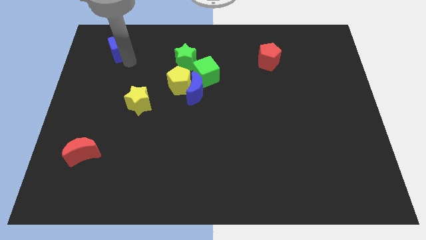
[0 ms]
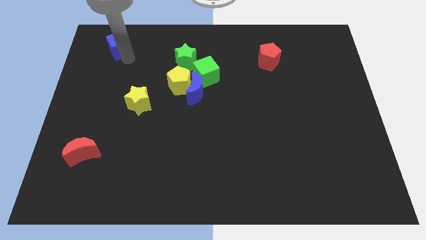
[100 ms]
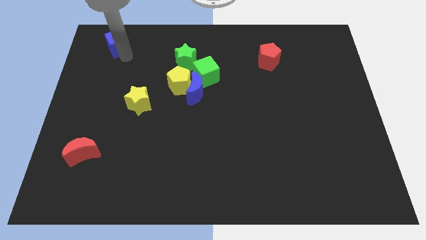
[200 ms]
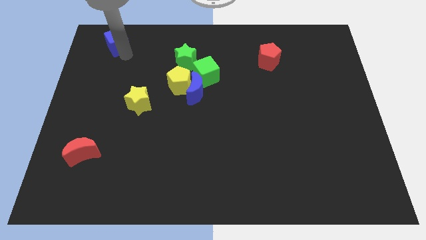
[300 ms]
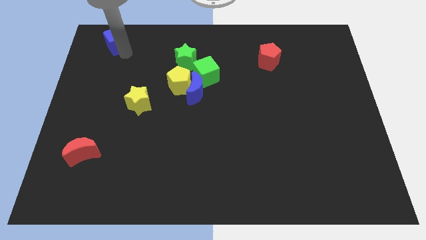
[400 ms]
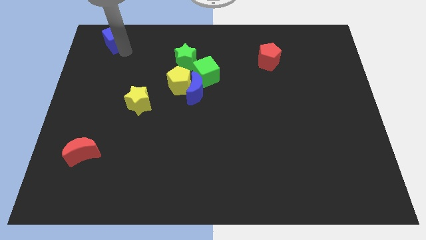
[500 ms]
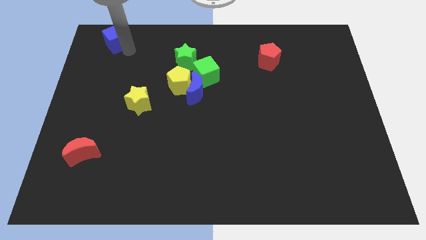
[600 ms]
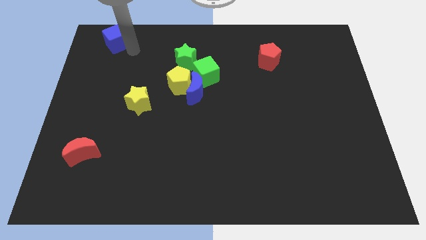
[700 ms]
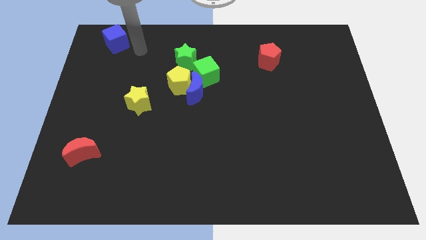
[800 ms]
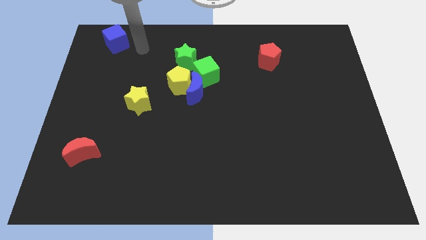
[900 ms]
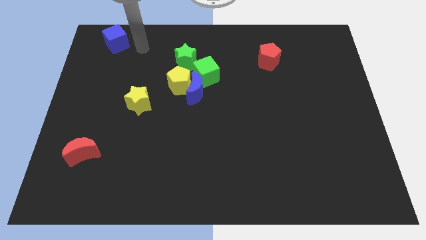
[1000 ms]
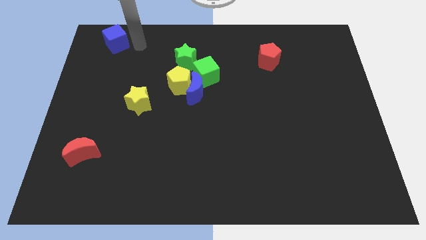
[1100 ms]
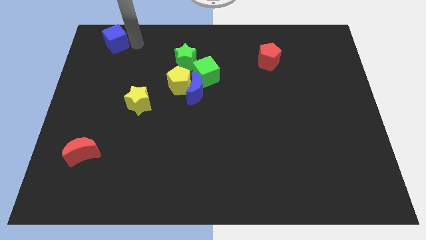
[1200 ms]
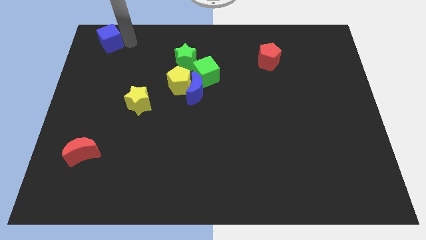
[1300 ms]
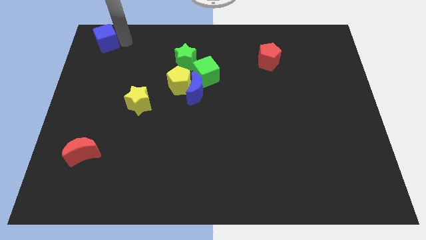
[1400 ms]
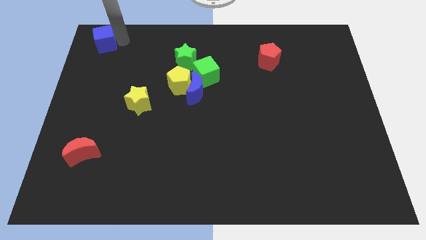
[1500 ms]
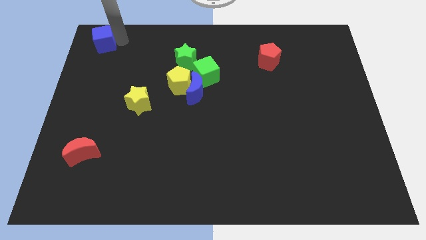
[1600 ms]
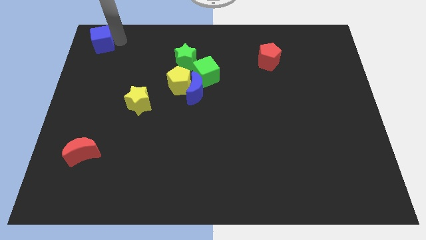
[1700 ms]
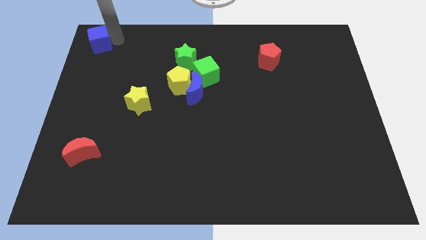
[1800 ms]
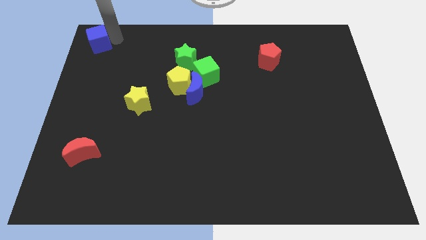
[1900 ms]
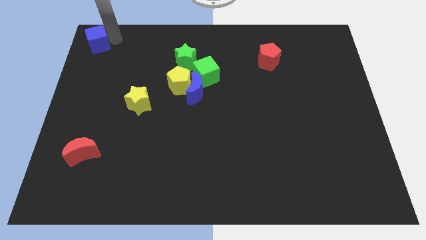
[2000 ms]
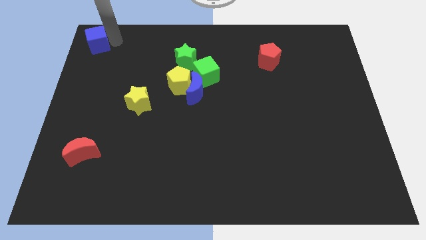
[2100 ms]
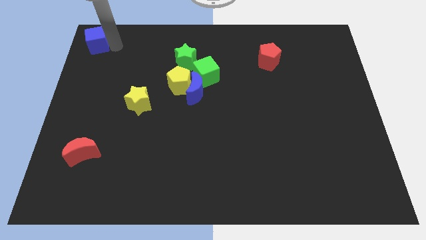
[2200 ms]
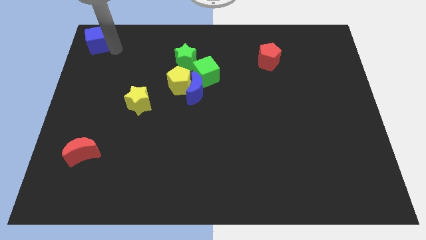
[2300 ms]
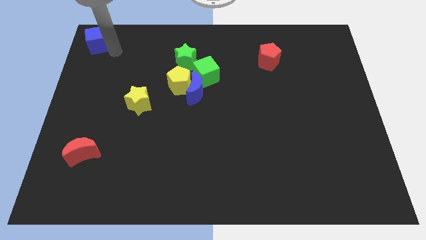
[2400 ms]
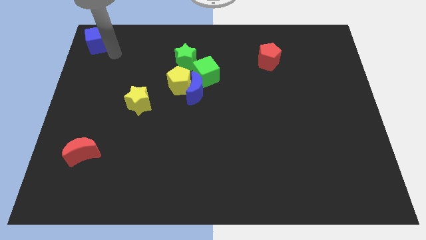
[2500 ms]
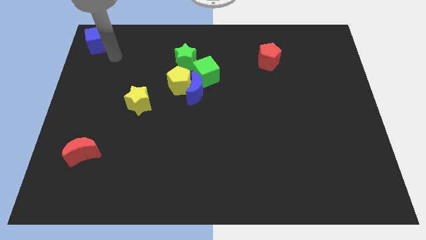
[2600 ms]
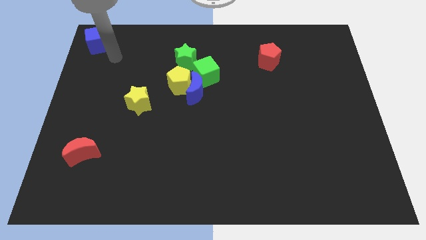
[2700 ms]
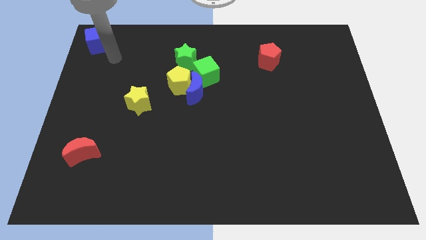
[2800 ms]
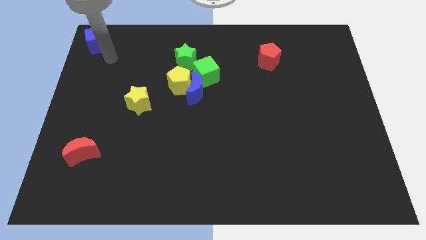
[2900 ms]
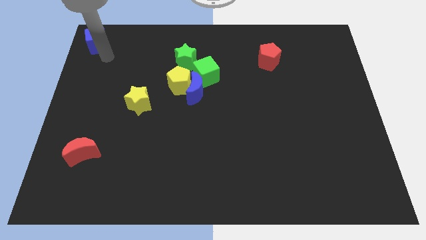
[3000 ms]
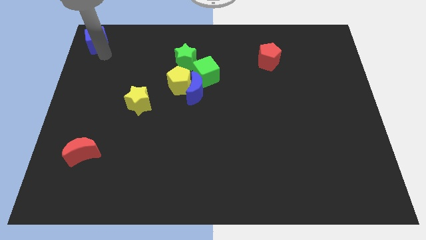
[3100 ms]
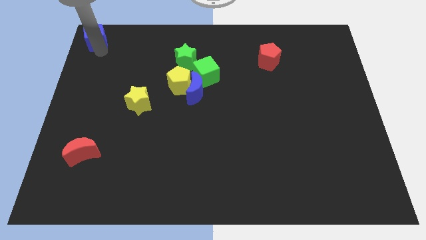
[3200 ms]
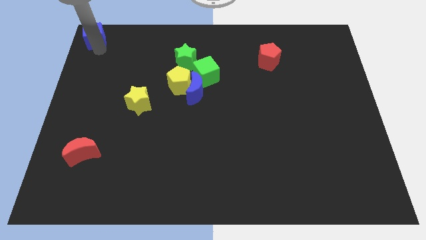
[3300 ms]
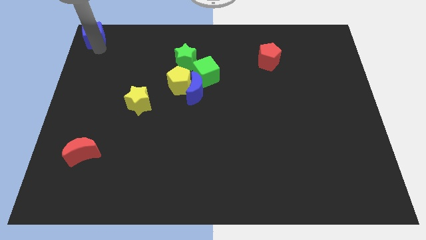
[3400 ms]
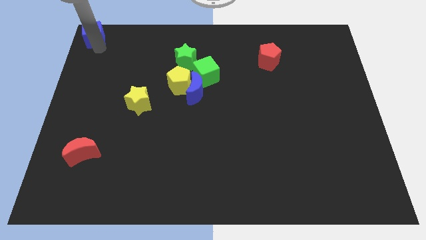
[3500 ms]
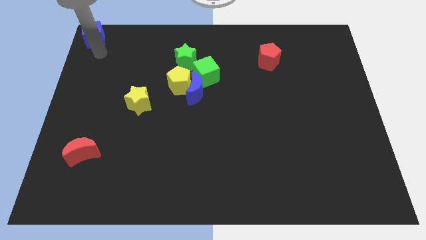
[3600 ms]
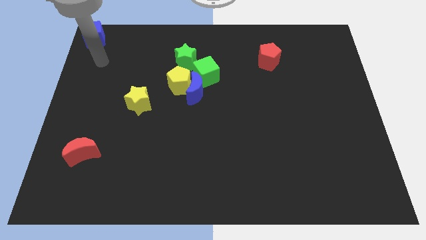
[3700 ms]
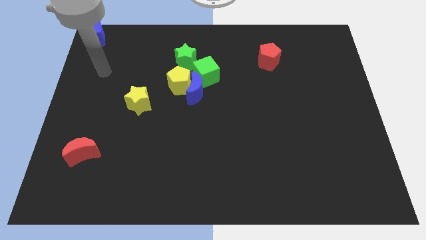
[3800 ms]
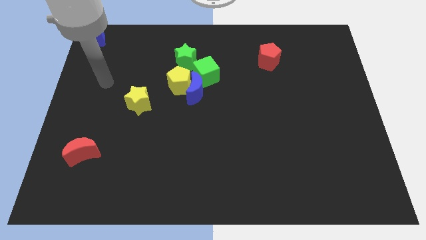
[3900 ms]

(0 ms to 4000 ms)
push blue cube at top left corner of the board

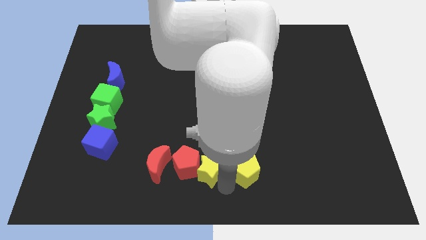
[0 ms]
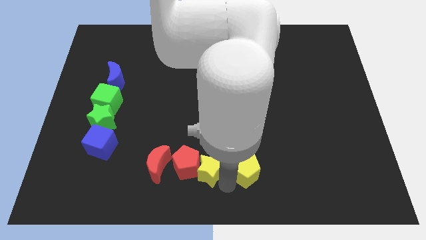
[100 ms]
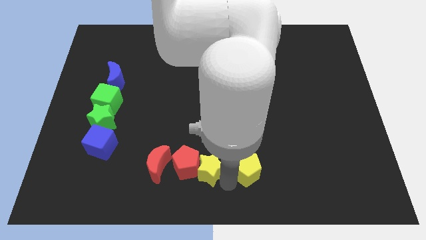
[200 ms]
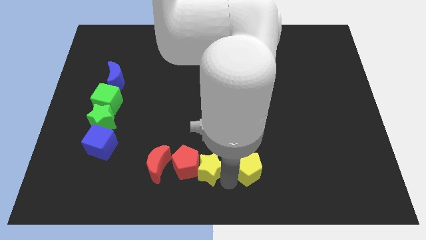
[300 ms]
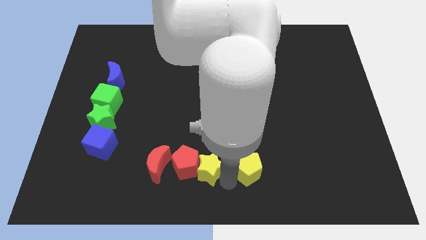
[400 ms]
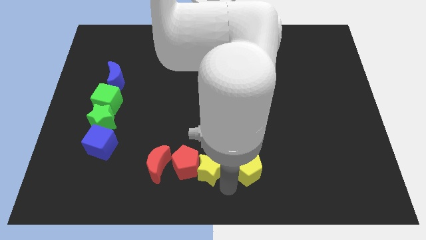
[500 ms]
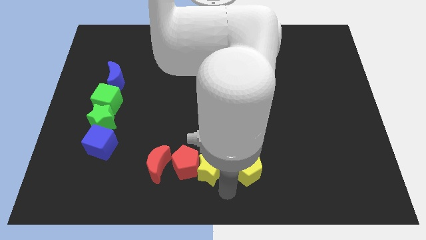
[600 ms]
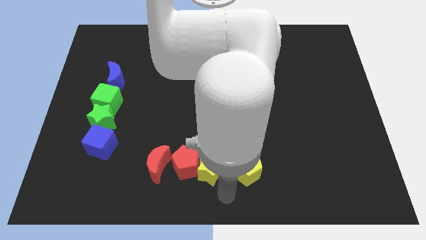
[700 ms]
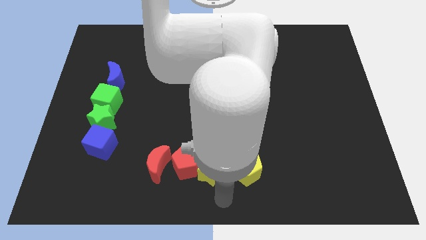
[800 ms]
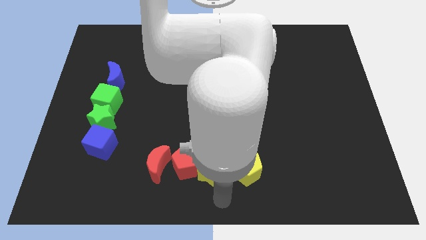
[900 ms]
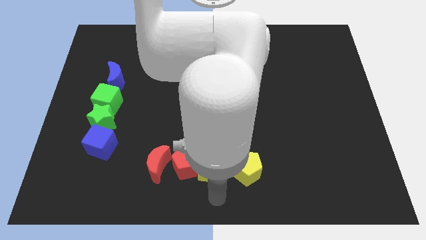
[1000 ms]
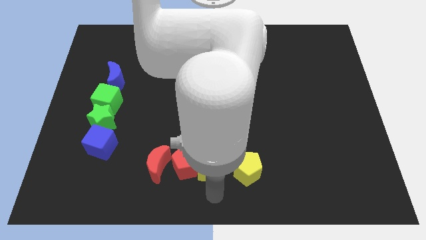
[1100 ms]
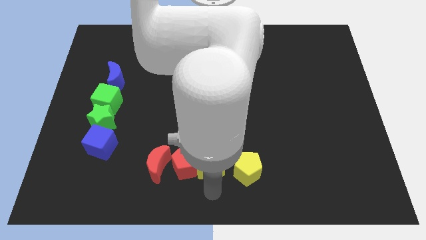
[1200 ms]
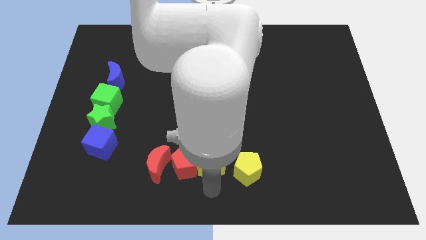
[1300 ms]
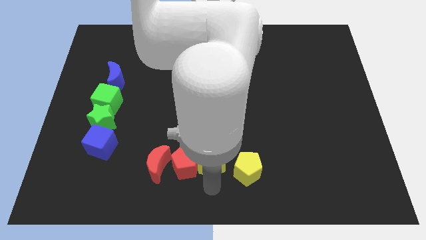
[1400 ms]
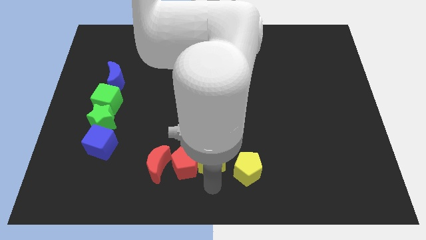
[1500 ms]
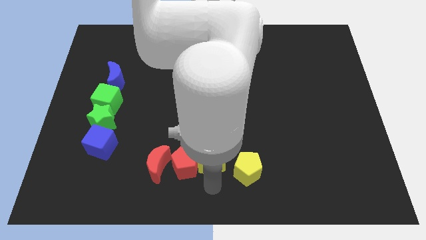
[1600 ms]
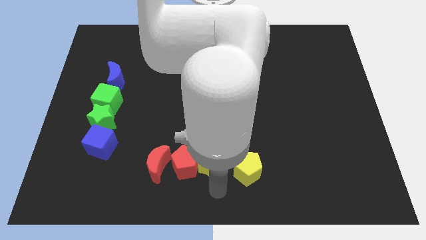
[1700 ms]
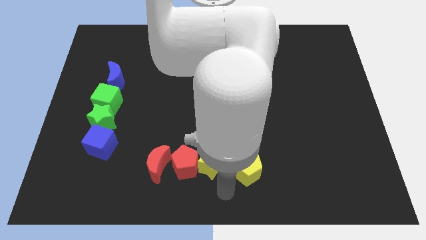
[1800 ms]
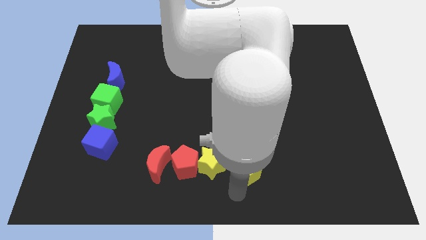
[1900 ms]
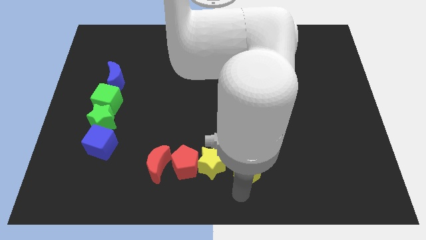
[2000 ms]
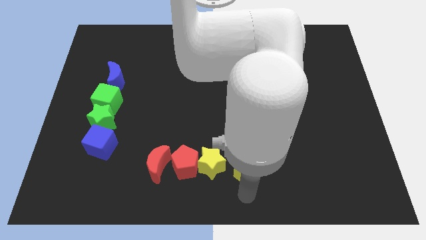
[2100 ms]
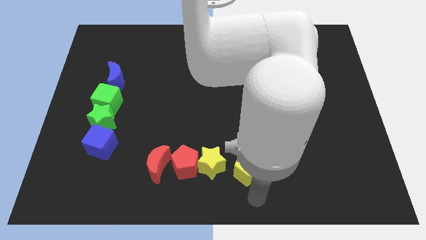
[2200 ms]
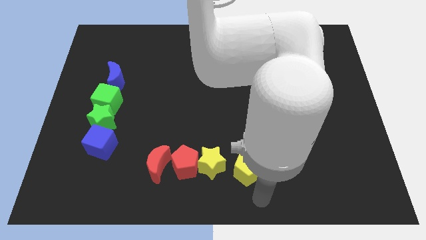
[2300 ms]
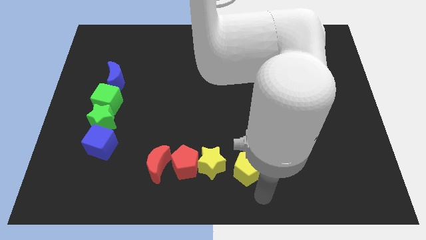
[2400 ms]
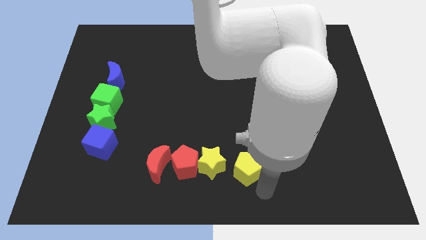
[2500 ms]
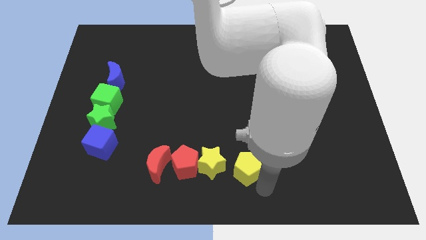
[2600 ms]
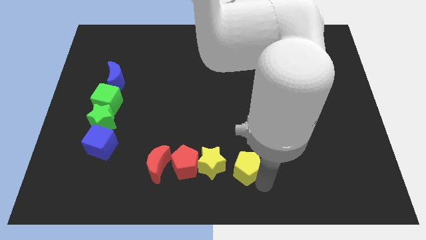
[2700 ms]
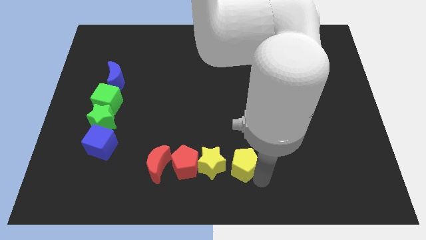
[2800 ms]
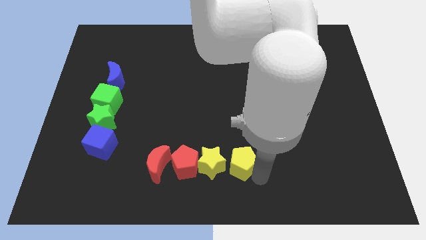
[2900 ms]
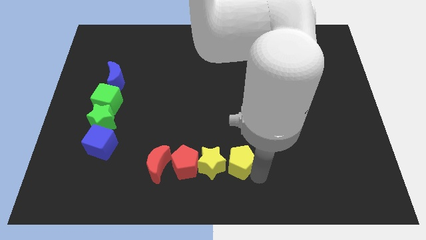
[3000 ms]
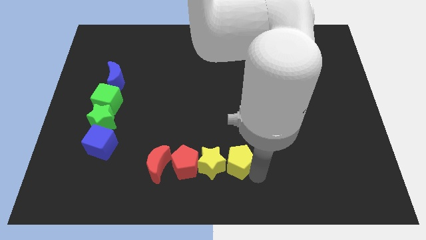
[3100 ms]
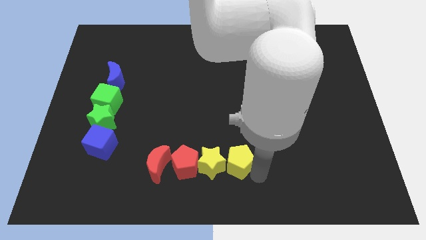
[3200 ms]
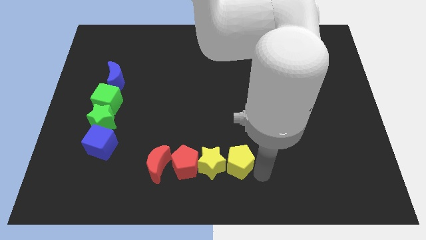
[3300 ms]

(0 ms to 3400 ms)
make a horizontal line out of red and the yellow blocks

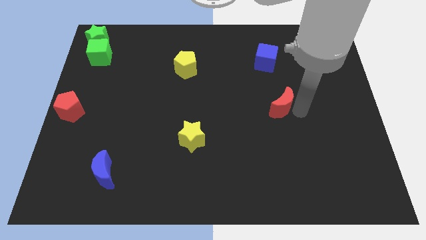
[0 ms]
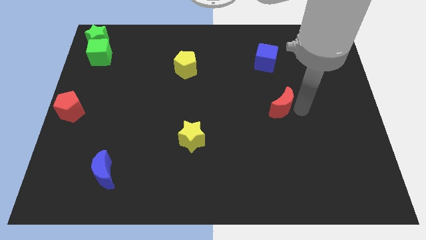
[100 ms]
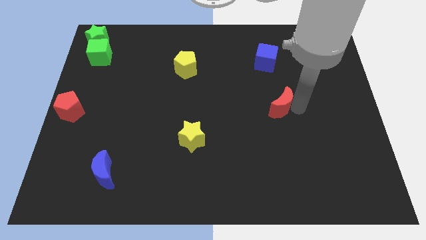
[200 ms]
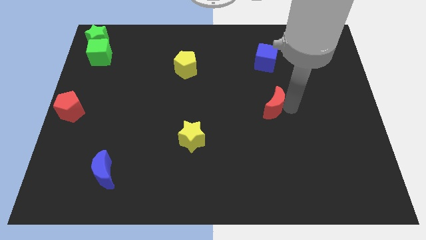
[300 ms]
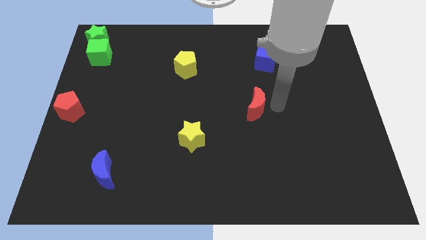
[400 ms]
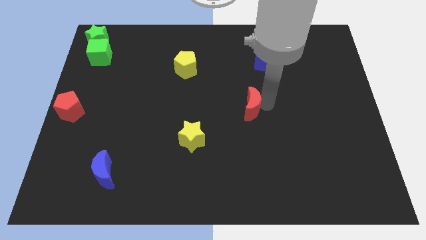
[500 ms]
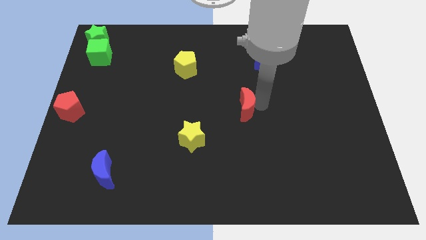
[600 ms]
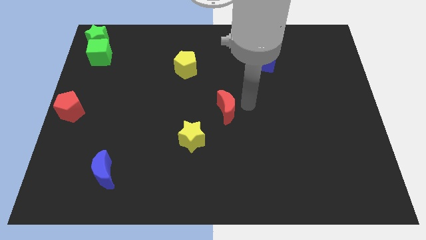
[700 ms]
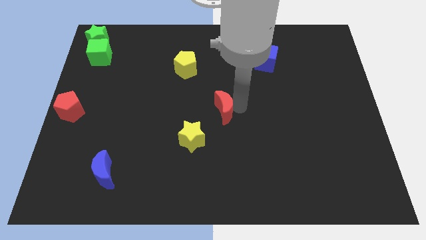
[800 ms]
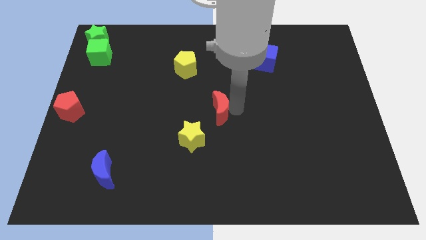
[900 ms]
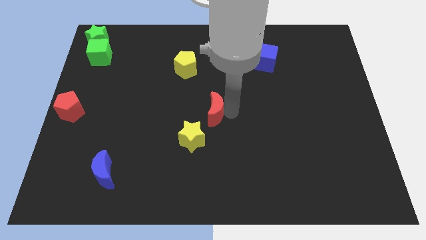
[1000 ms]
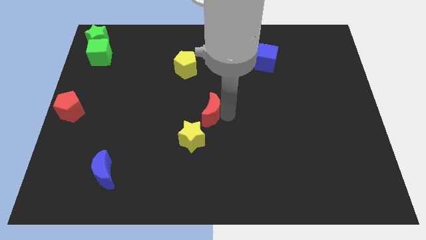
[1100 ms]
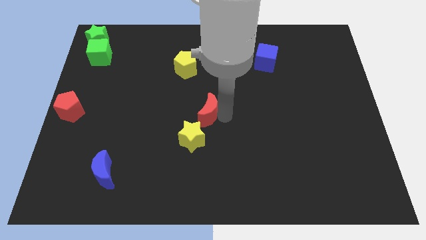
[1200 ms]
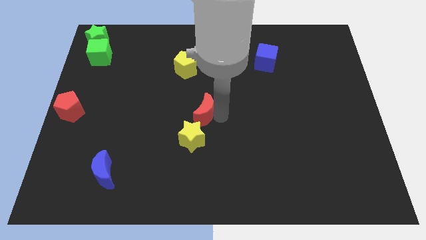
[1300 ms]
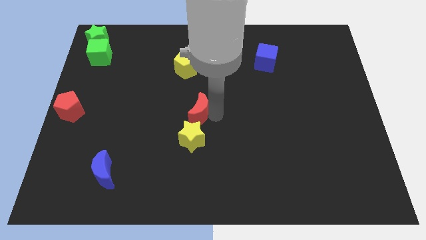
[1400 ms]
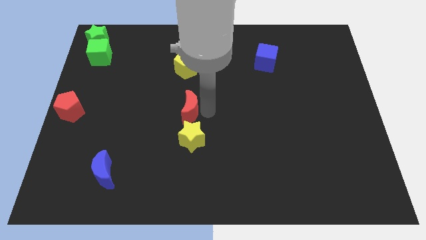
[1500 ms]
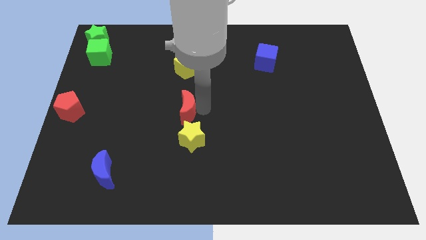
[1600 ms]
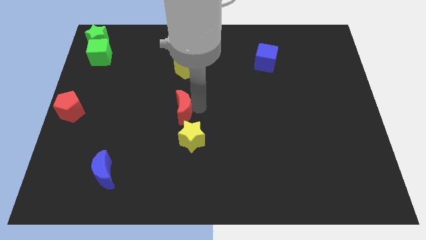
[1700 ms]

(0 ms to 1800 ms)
move the red crescent to the top of the yellow star
